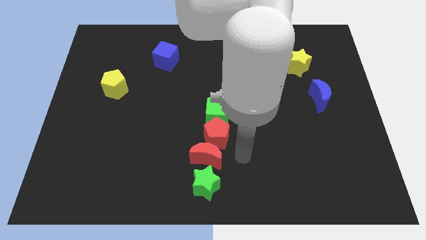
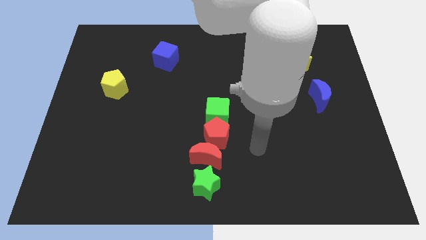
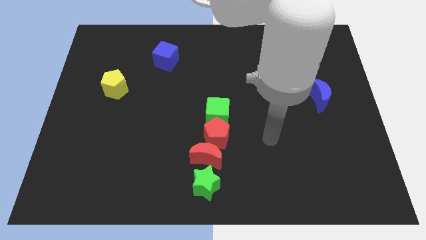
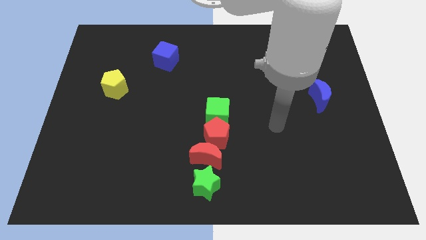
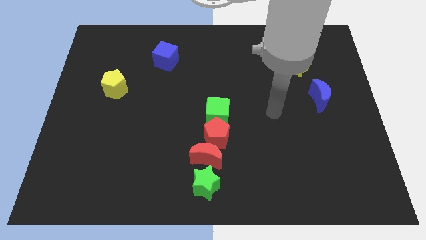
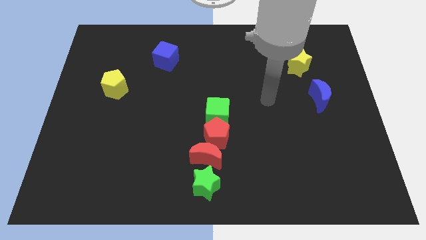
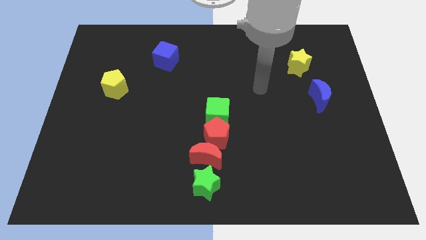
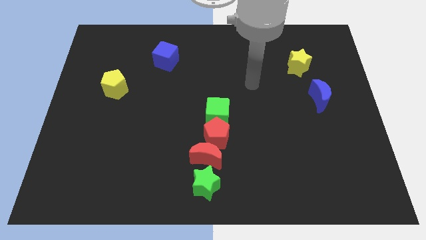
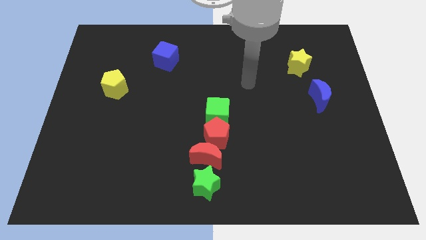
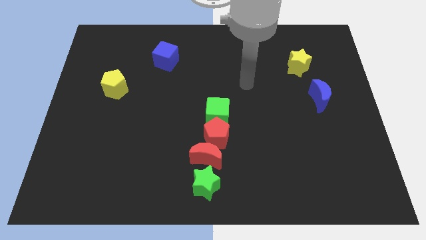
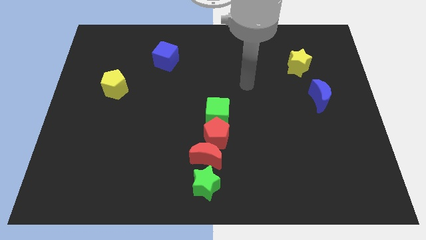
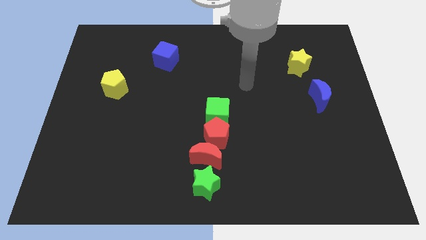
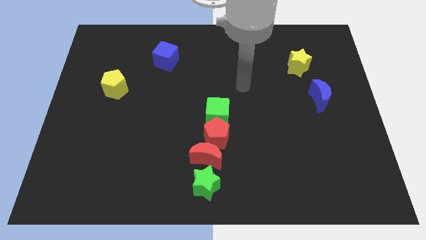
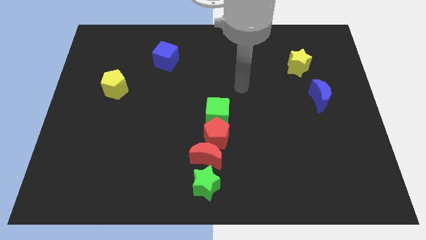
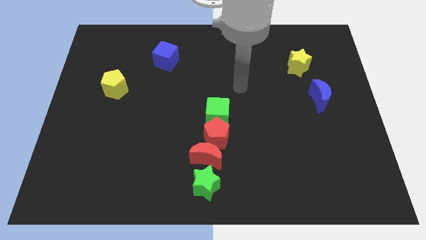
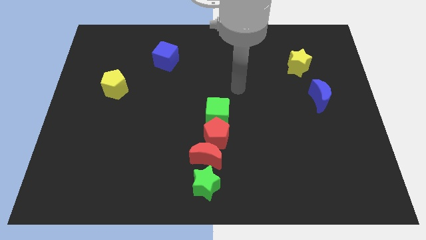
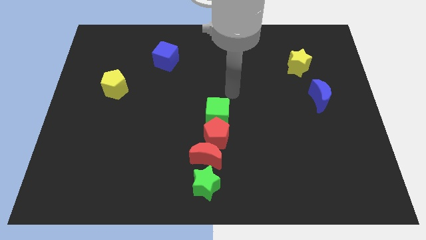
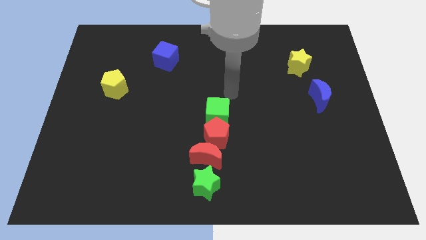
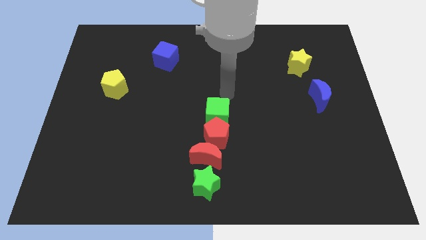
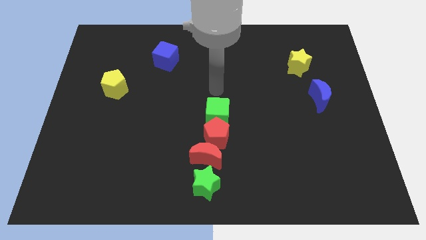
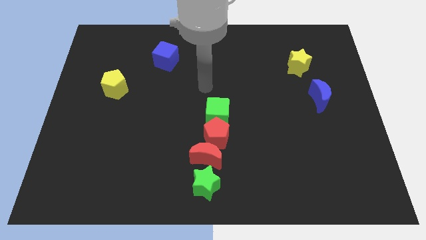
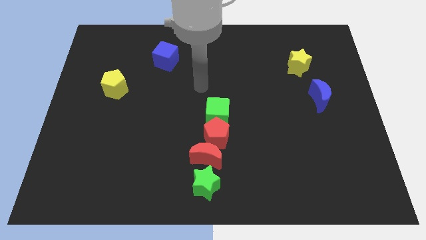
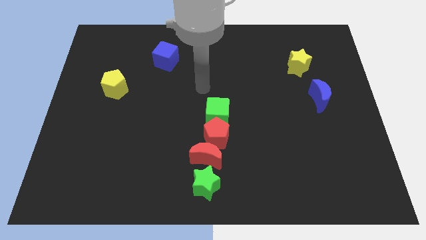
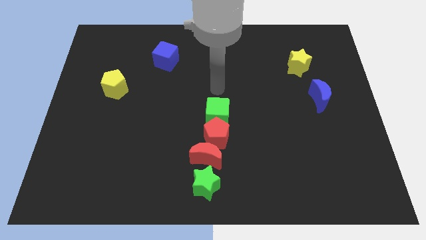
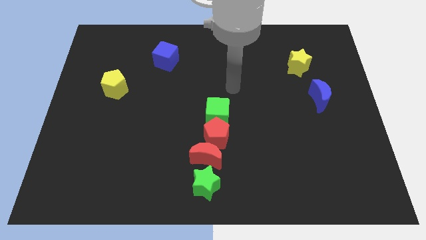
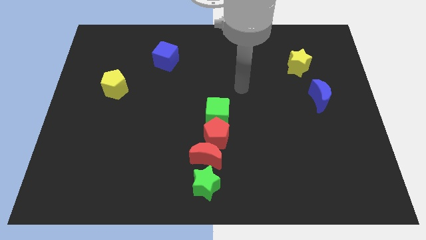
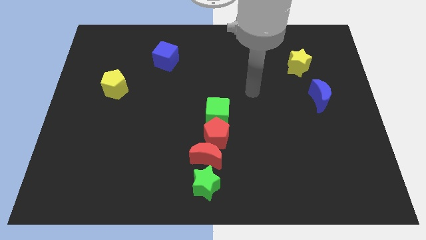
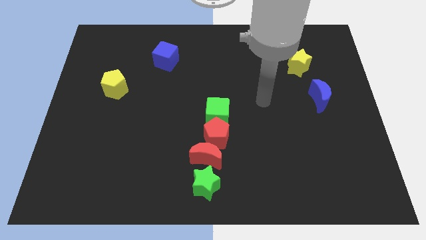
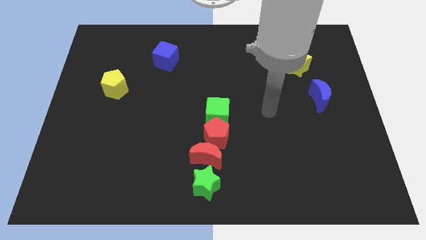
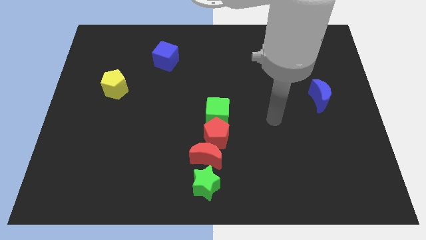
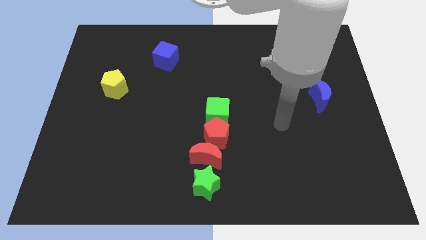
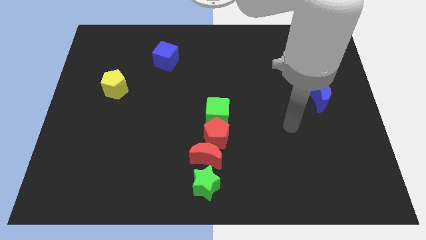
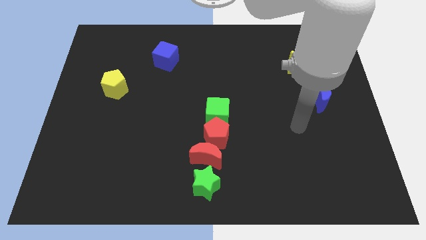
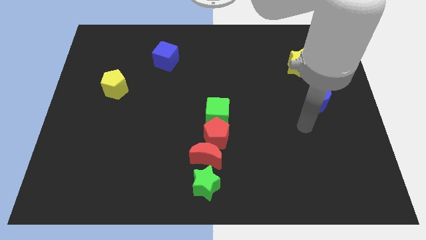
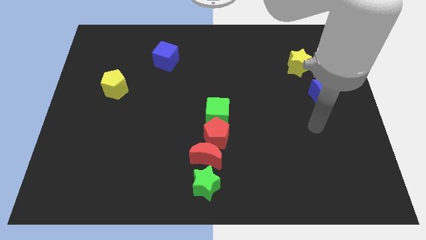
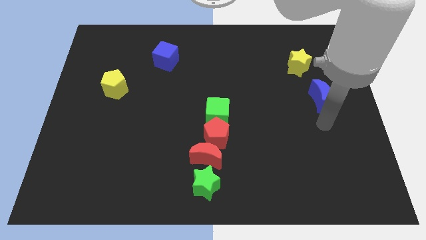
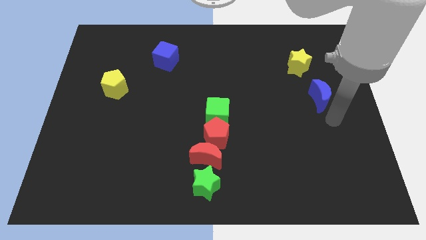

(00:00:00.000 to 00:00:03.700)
place your arm below the blue crescent

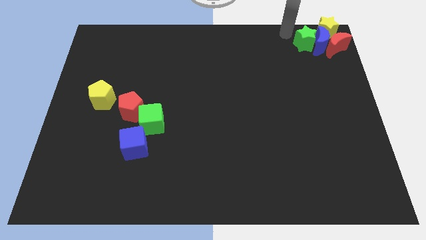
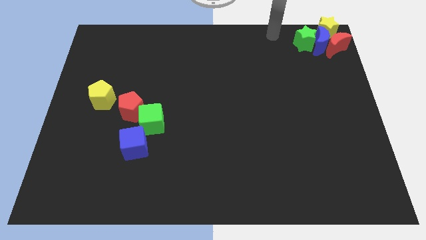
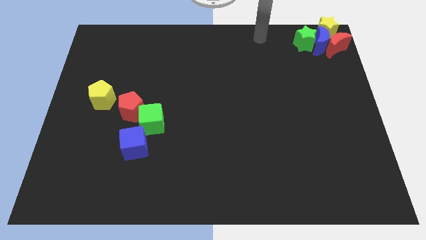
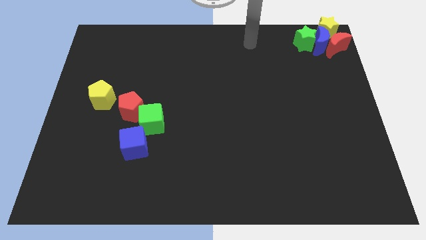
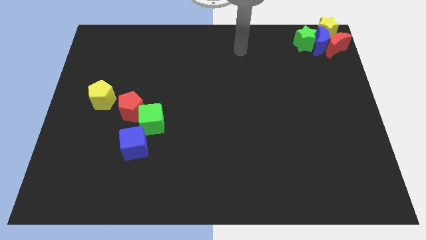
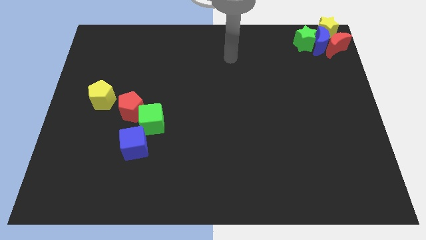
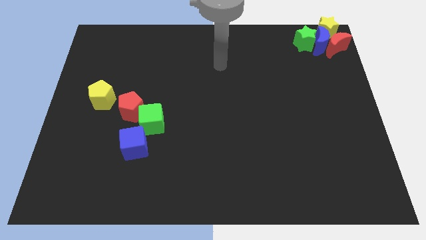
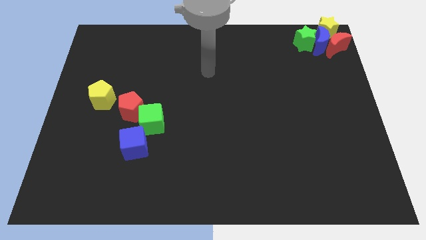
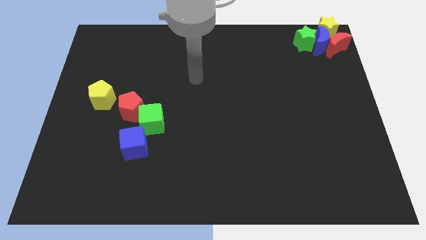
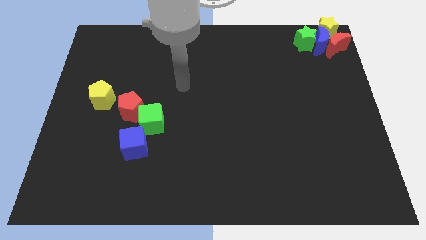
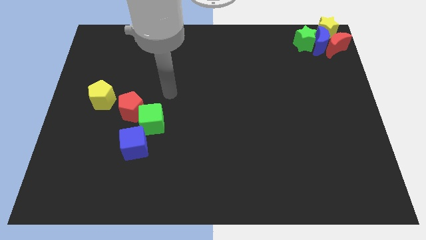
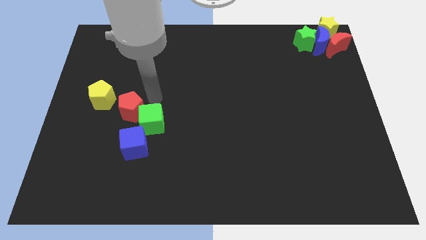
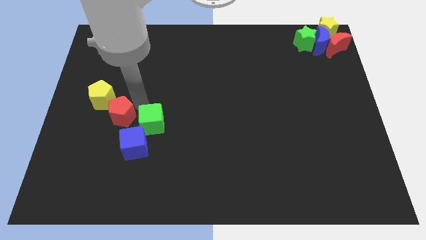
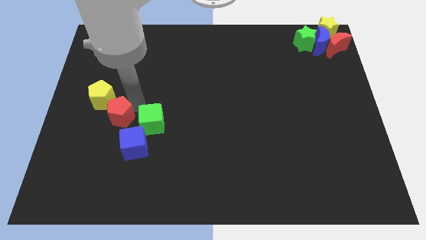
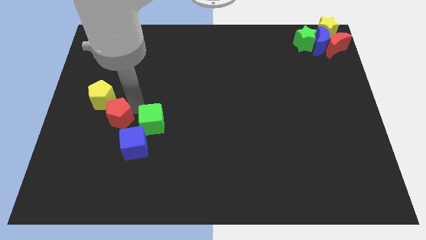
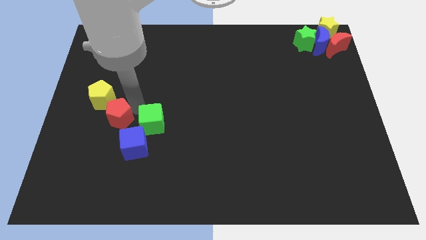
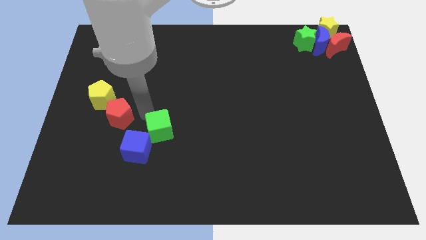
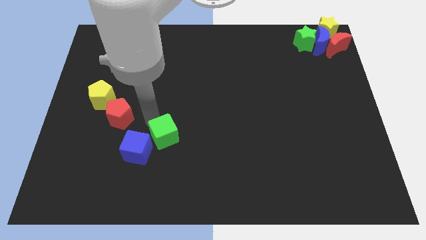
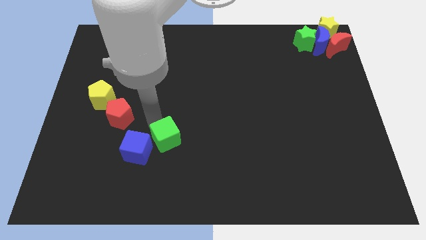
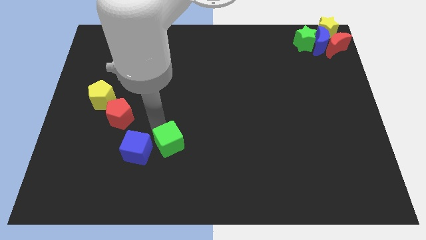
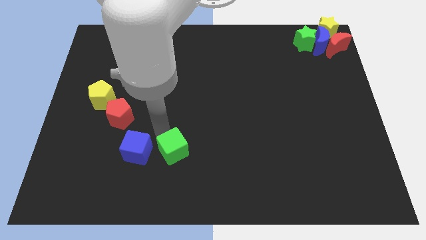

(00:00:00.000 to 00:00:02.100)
move the green cube right of the blue cube

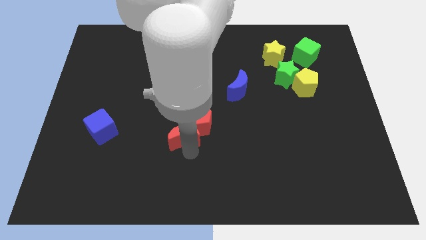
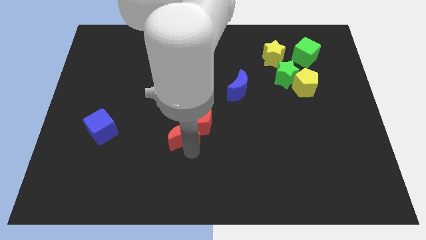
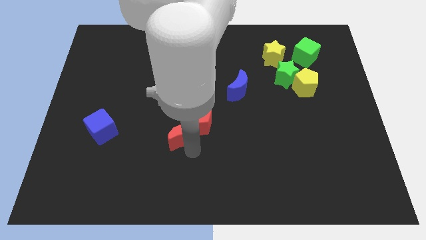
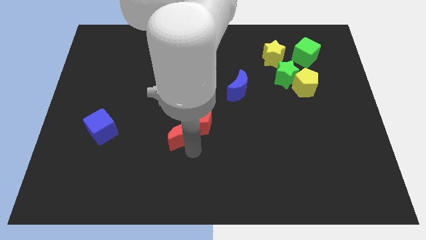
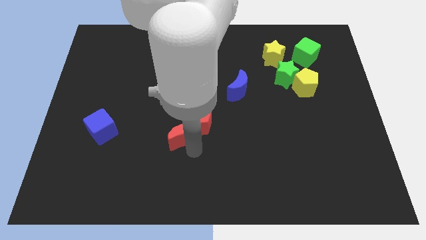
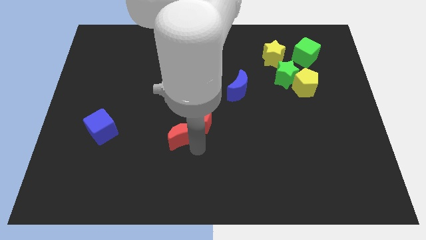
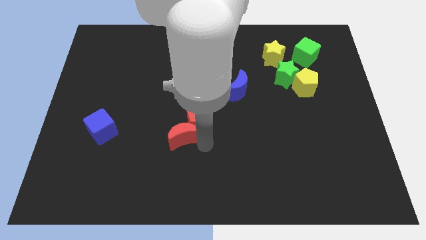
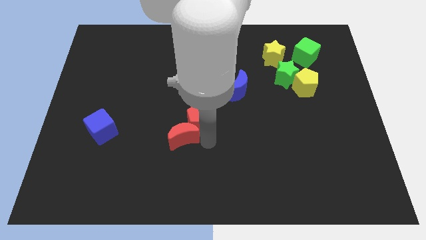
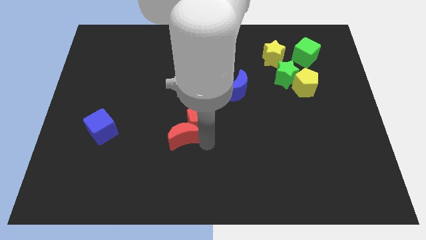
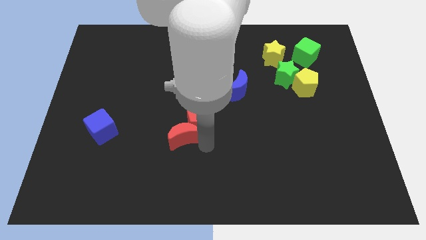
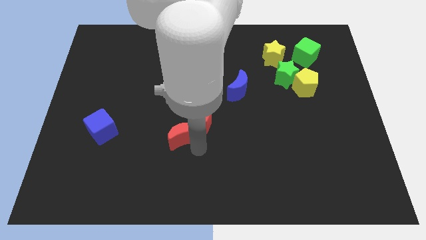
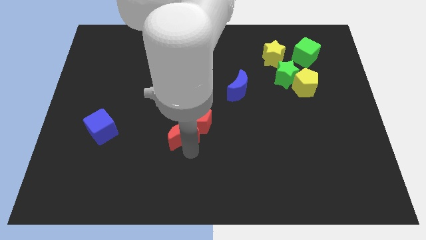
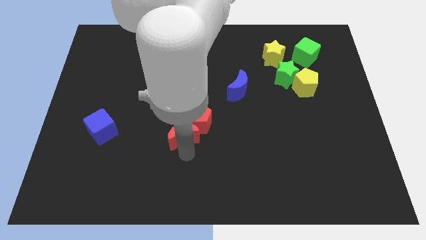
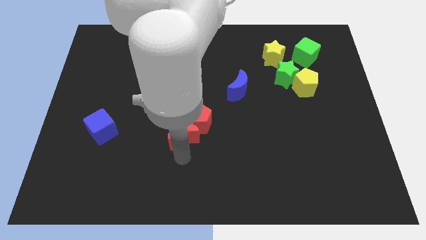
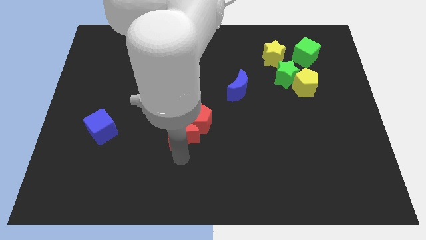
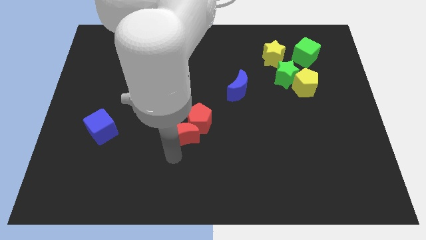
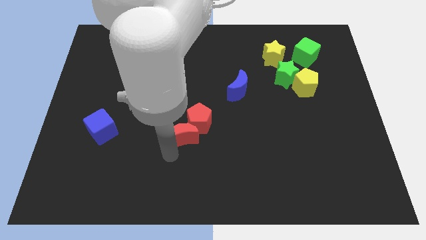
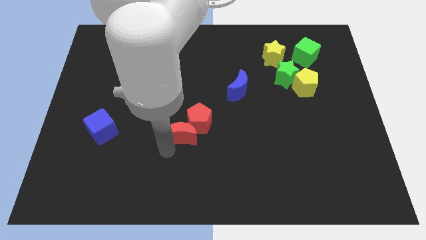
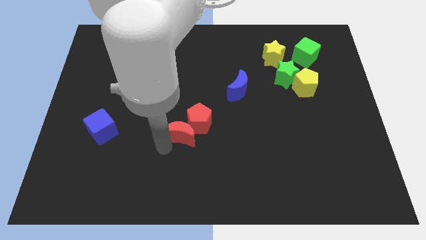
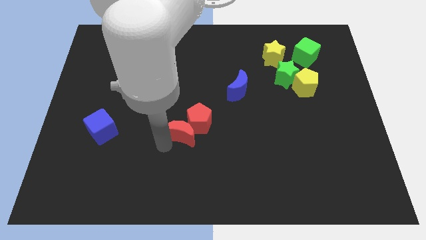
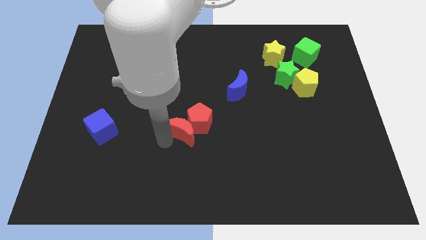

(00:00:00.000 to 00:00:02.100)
point your arm to the left side of the red crescent

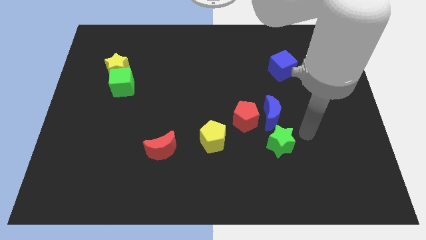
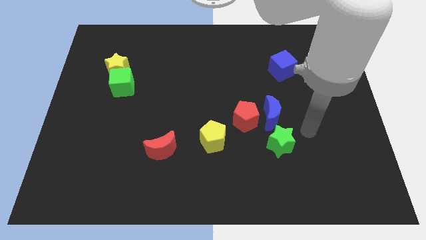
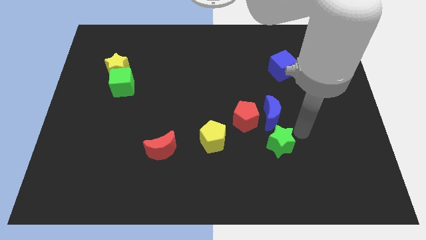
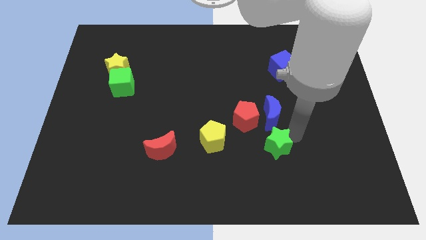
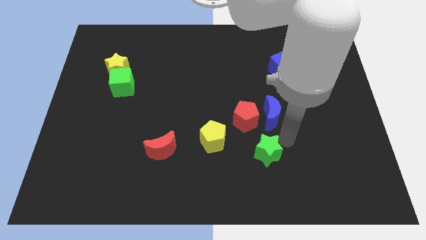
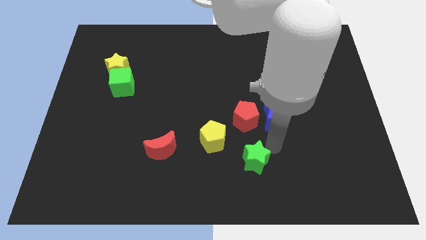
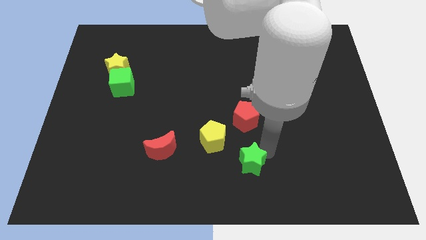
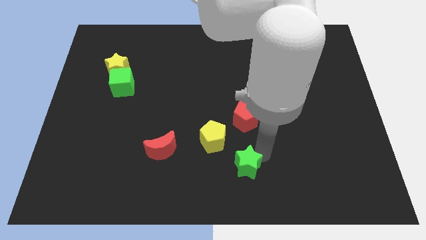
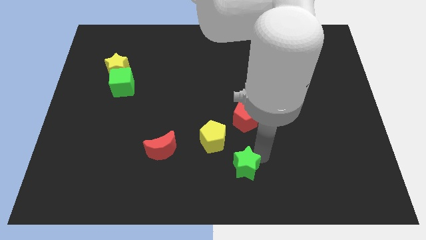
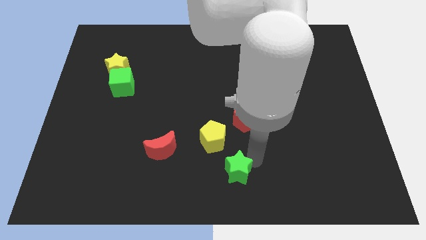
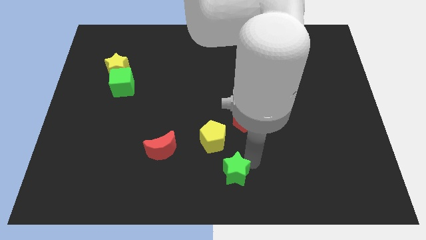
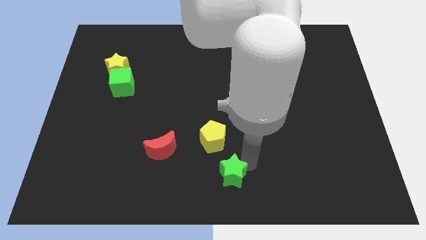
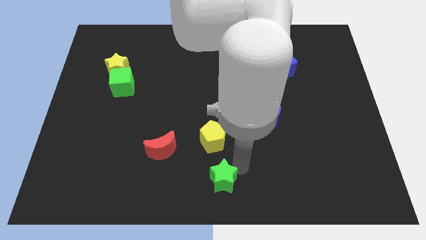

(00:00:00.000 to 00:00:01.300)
slide the green star diagonally bottom left to the red pentagon
